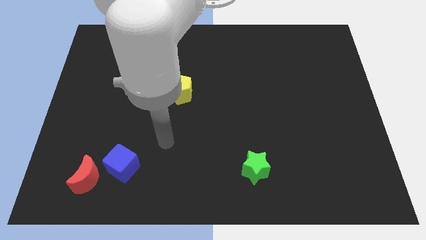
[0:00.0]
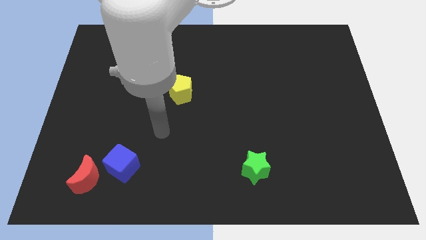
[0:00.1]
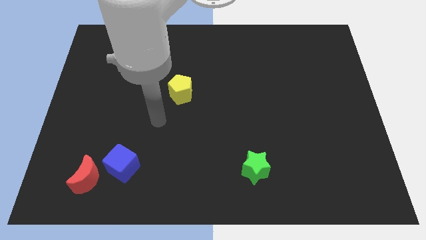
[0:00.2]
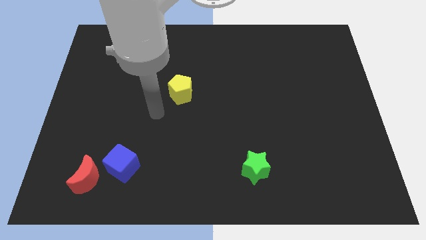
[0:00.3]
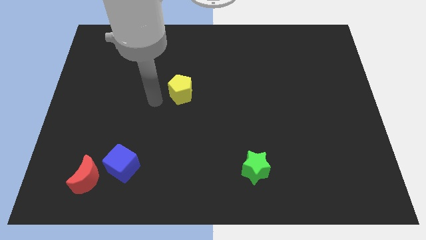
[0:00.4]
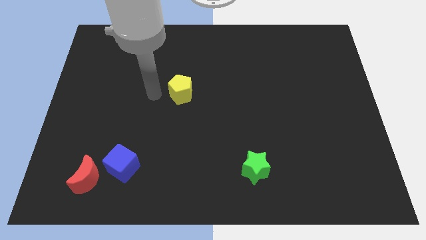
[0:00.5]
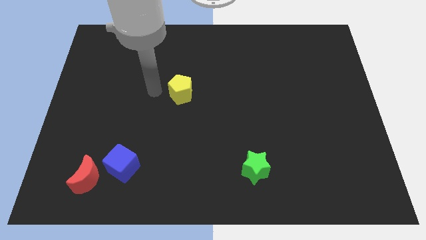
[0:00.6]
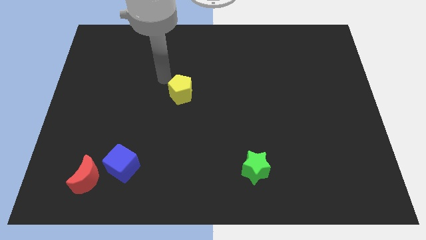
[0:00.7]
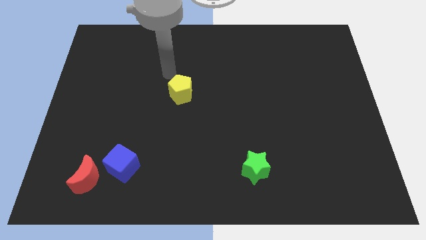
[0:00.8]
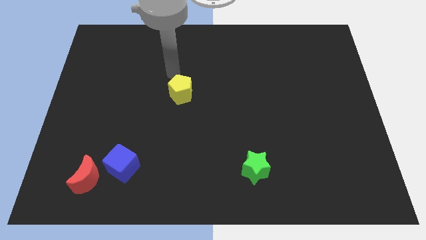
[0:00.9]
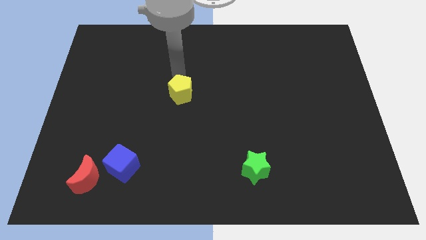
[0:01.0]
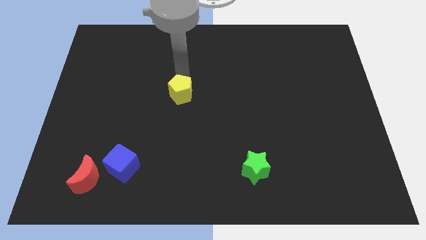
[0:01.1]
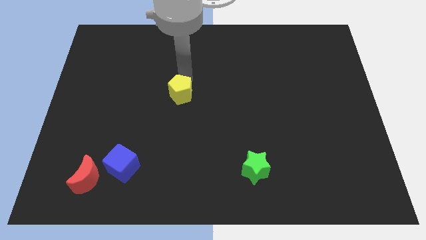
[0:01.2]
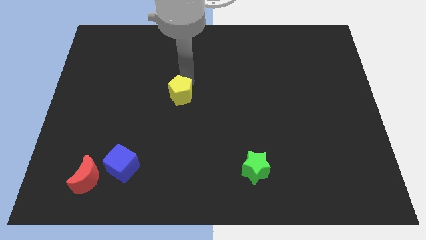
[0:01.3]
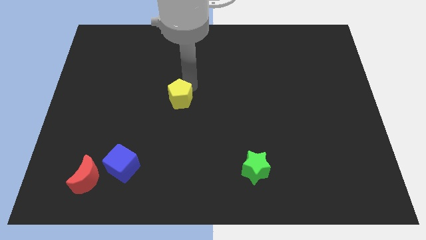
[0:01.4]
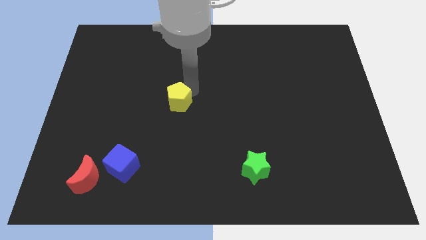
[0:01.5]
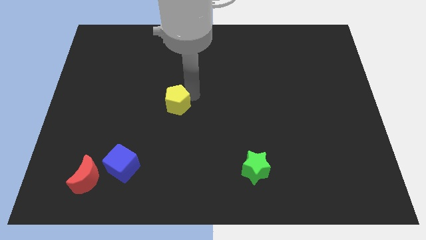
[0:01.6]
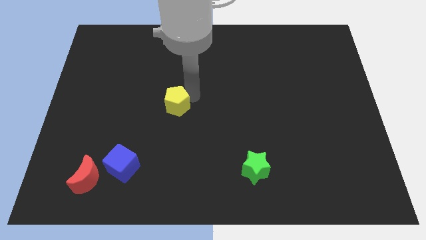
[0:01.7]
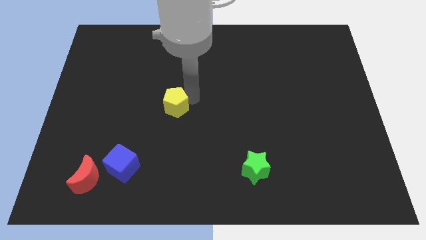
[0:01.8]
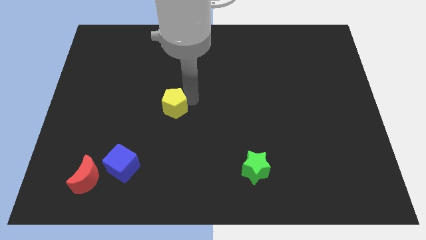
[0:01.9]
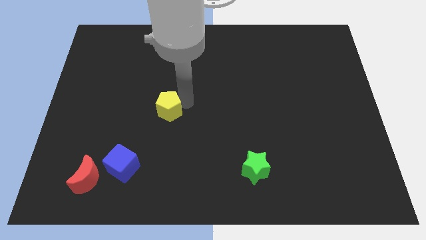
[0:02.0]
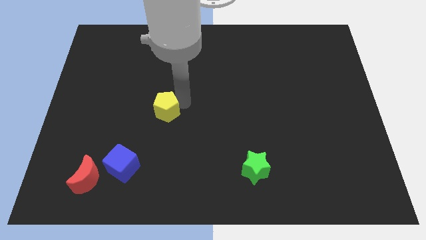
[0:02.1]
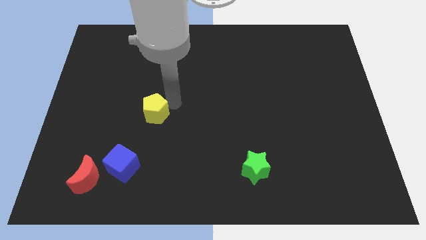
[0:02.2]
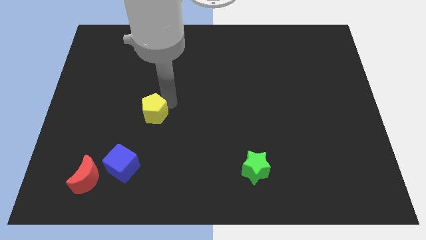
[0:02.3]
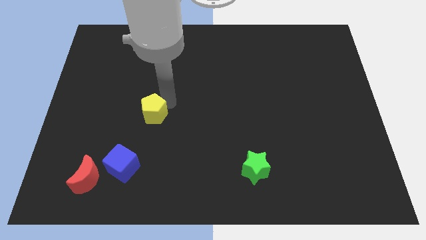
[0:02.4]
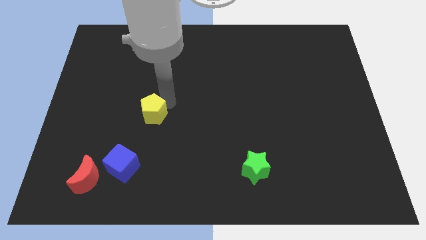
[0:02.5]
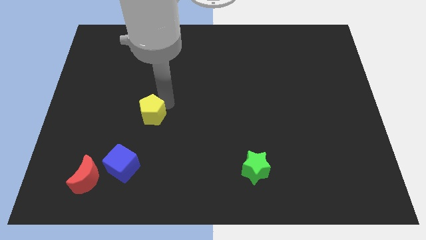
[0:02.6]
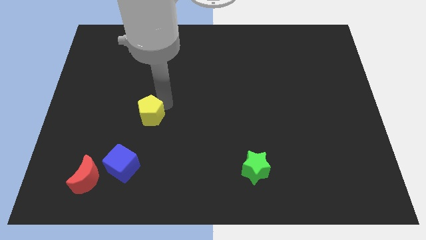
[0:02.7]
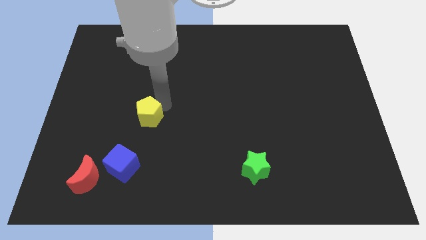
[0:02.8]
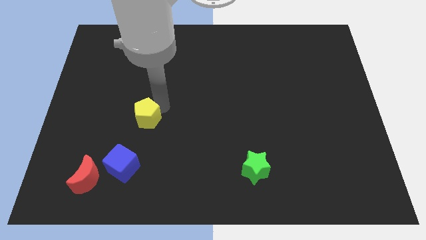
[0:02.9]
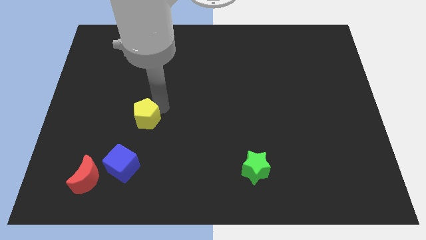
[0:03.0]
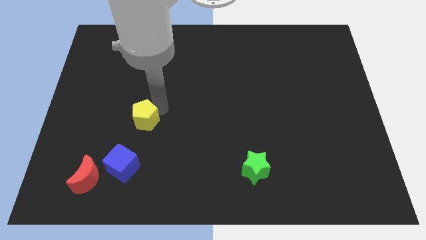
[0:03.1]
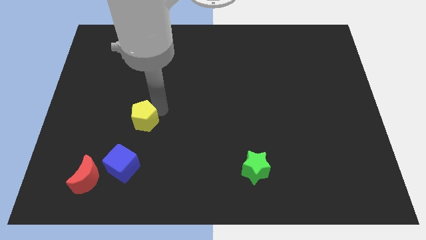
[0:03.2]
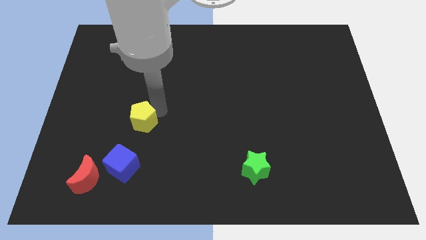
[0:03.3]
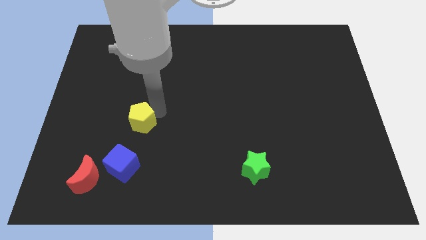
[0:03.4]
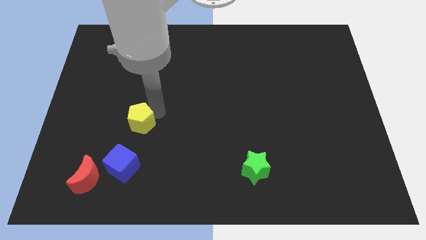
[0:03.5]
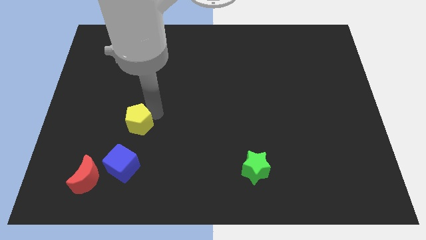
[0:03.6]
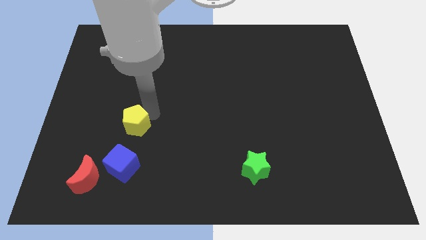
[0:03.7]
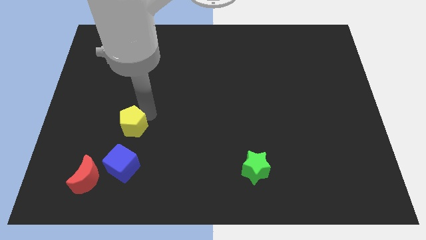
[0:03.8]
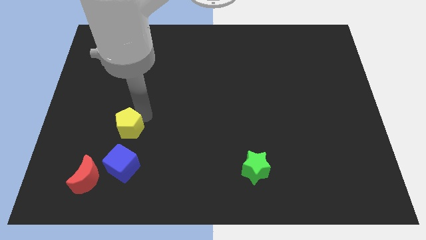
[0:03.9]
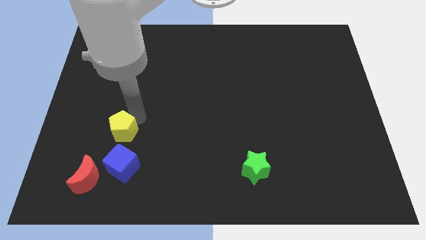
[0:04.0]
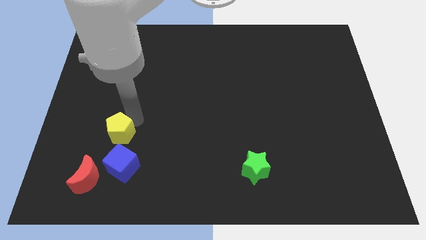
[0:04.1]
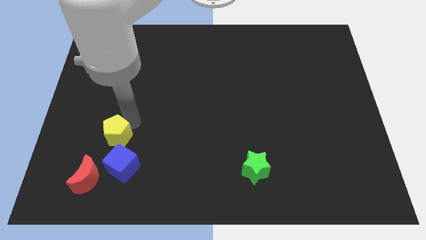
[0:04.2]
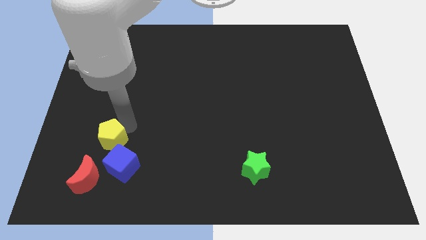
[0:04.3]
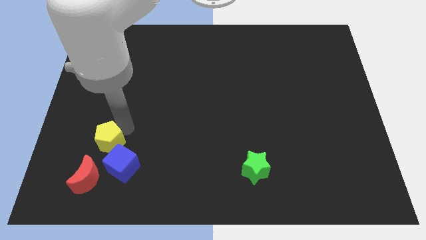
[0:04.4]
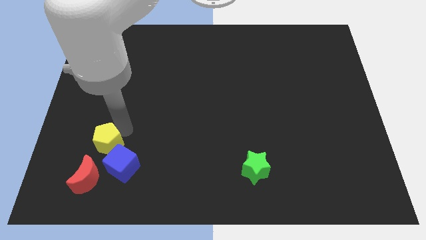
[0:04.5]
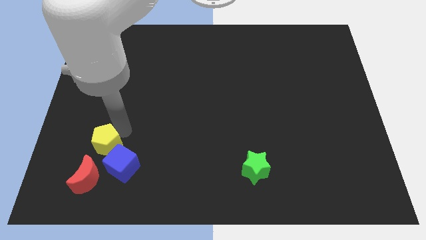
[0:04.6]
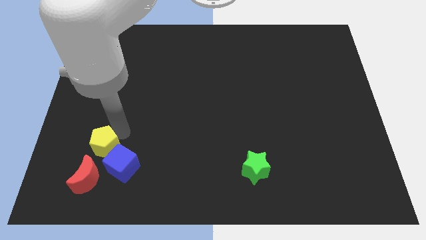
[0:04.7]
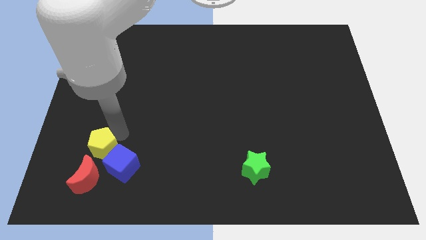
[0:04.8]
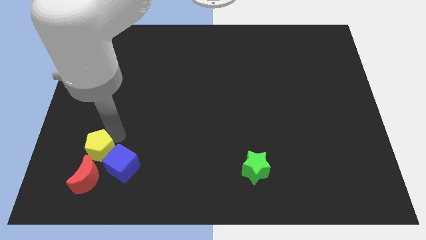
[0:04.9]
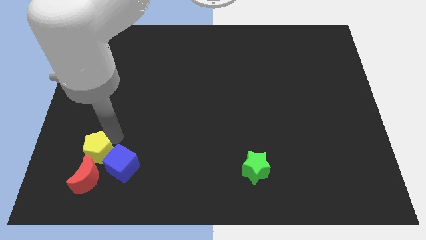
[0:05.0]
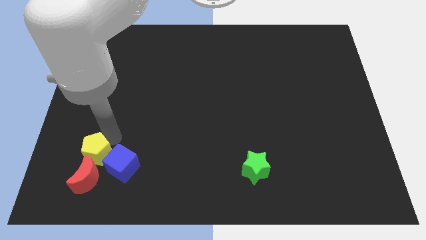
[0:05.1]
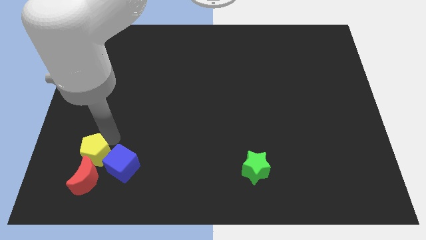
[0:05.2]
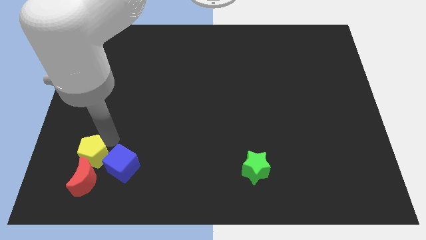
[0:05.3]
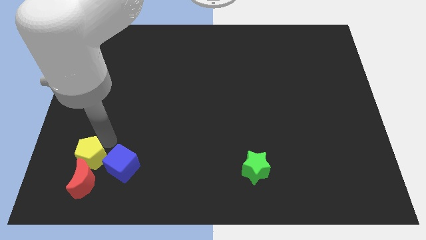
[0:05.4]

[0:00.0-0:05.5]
move the yellow block next to the moon

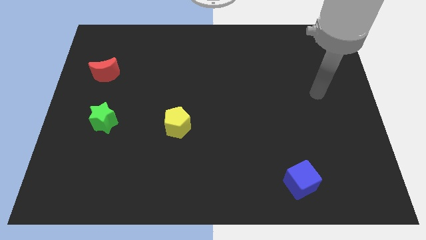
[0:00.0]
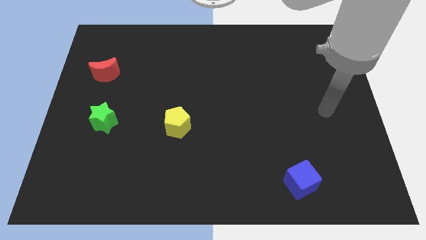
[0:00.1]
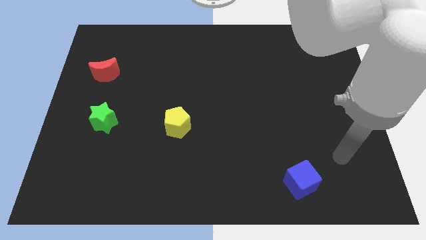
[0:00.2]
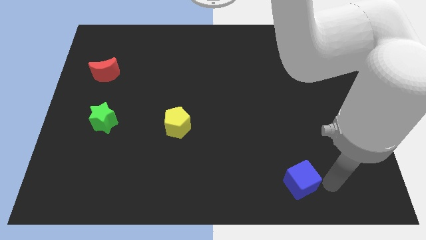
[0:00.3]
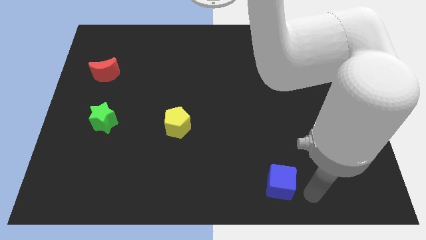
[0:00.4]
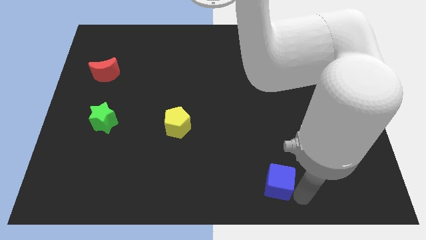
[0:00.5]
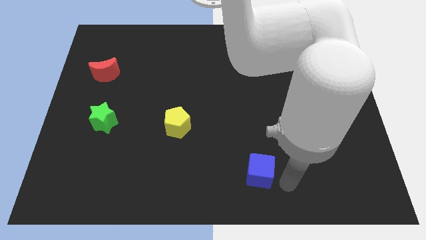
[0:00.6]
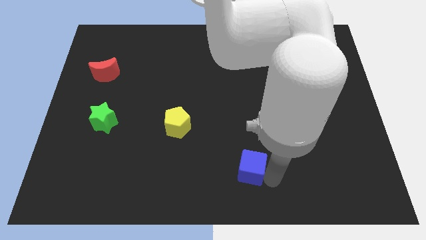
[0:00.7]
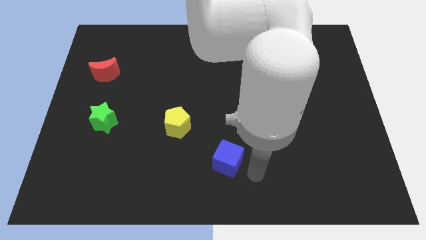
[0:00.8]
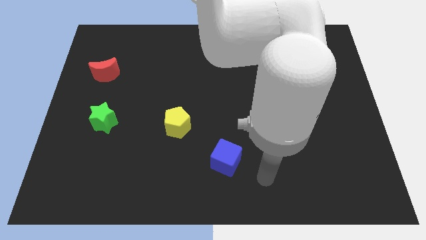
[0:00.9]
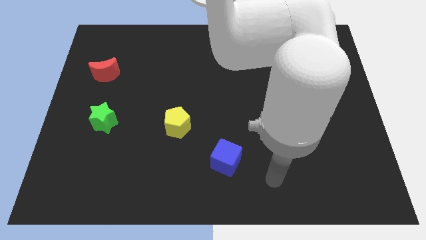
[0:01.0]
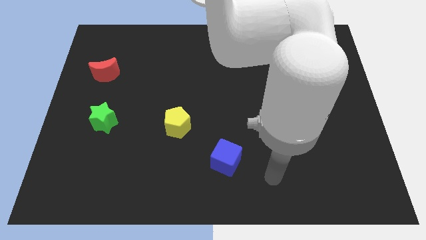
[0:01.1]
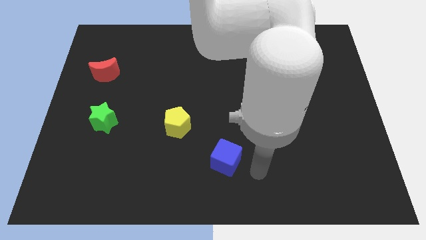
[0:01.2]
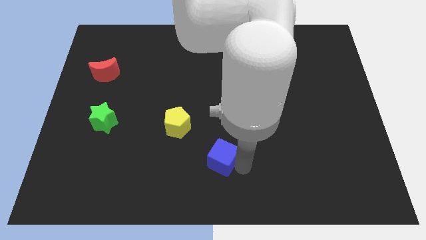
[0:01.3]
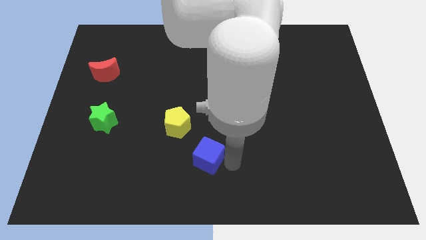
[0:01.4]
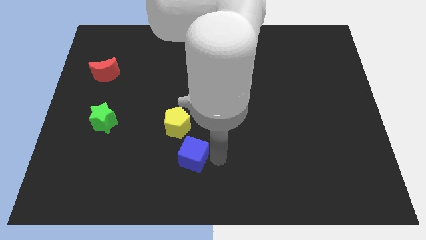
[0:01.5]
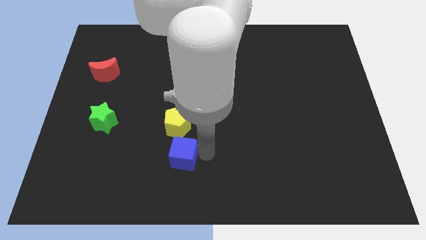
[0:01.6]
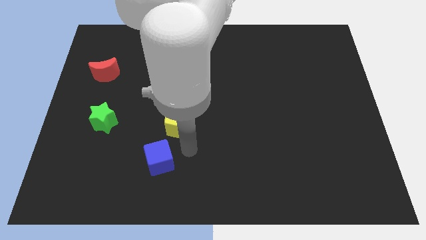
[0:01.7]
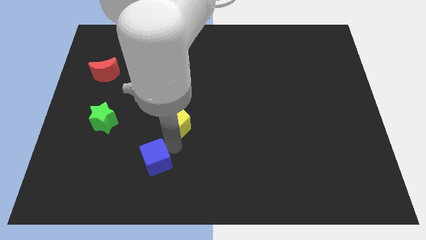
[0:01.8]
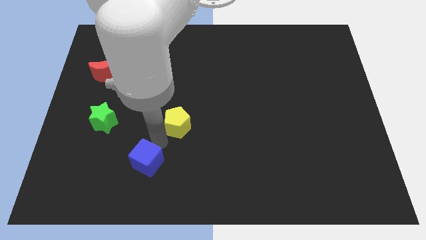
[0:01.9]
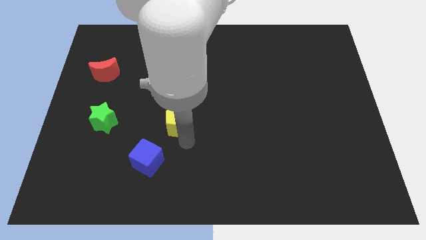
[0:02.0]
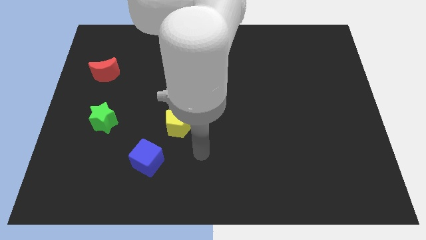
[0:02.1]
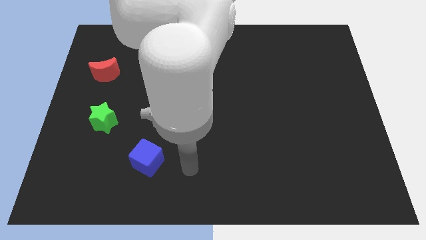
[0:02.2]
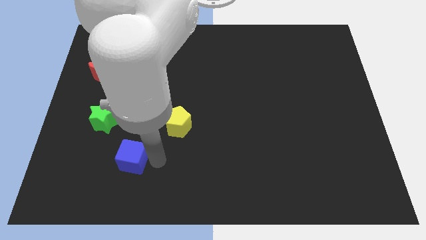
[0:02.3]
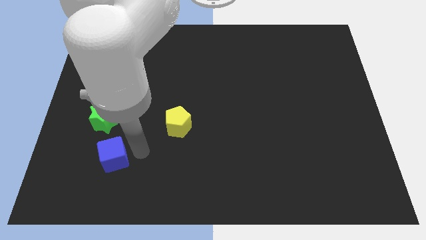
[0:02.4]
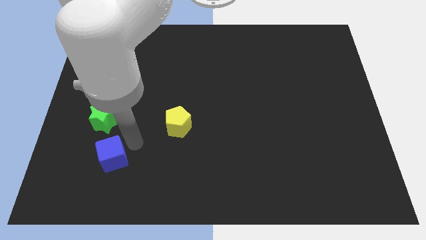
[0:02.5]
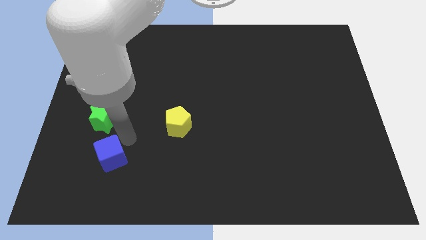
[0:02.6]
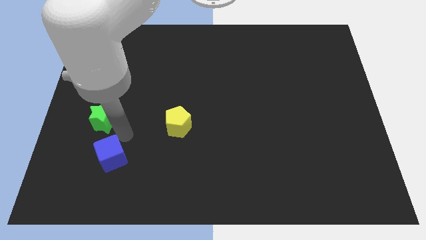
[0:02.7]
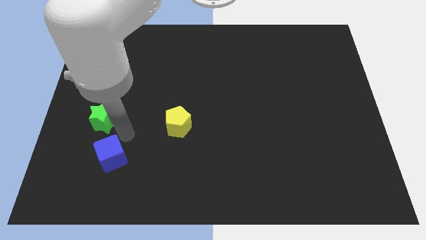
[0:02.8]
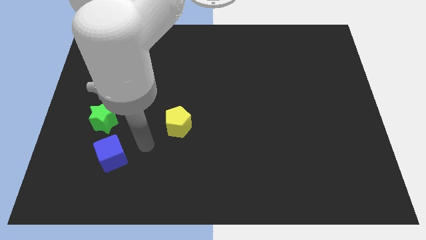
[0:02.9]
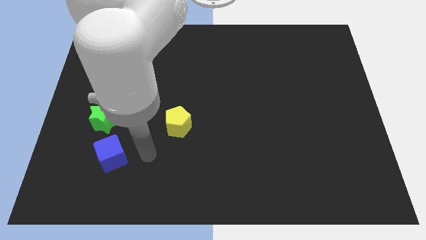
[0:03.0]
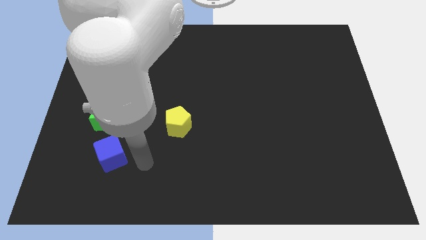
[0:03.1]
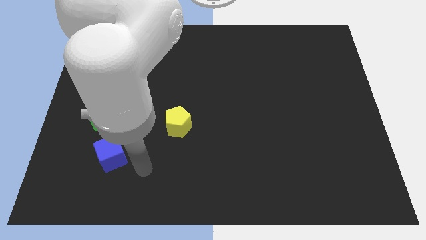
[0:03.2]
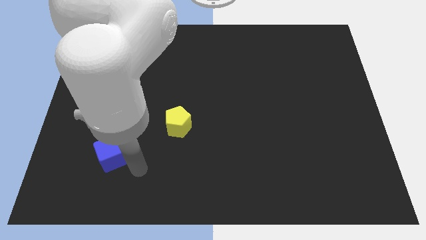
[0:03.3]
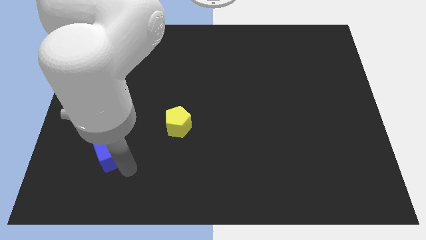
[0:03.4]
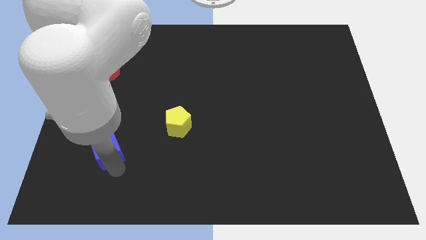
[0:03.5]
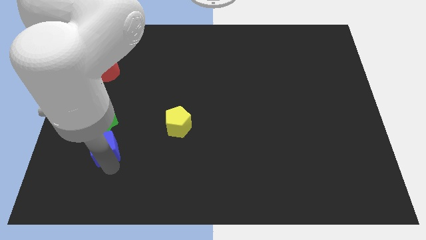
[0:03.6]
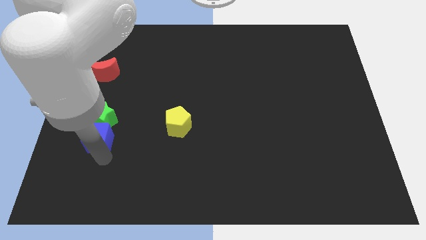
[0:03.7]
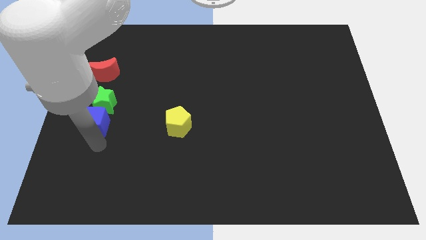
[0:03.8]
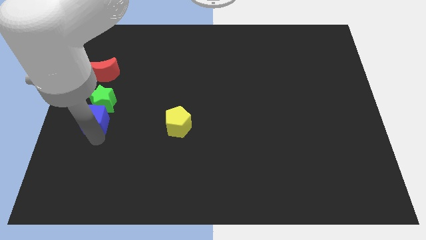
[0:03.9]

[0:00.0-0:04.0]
put the blue cube to the star
